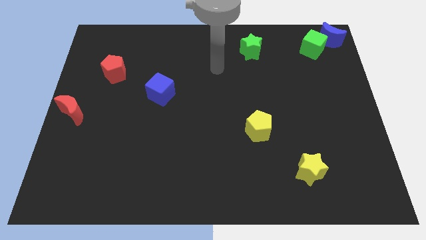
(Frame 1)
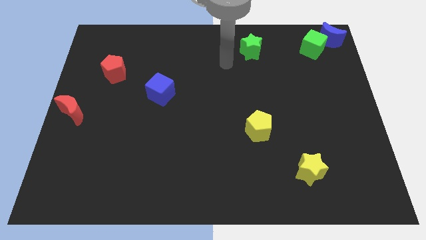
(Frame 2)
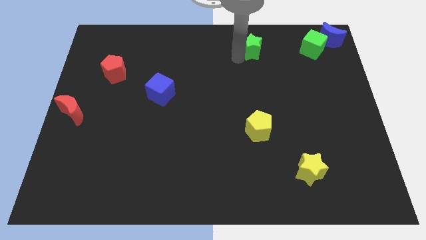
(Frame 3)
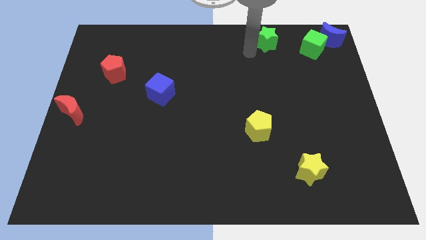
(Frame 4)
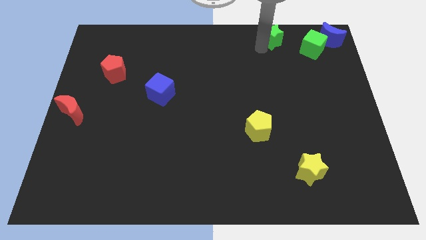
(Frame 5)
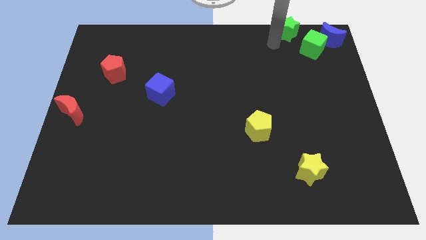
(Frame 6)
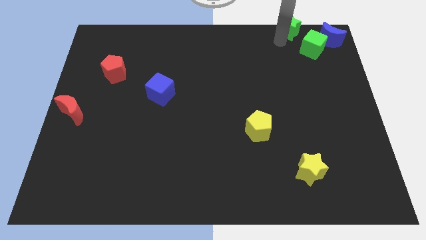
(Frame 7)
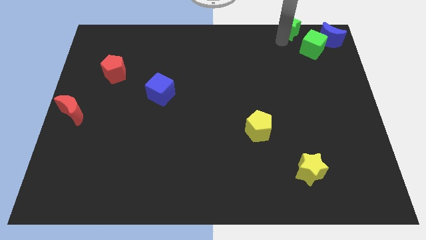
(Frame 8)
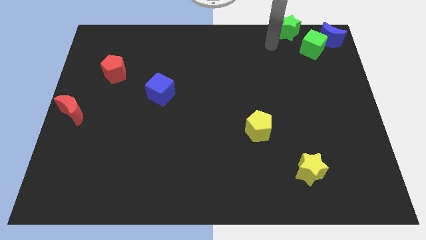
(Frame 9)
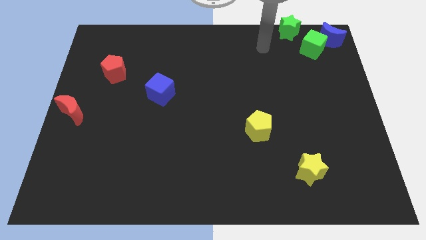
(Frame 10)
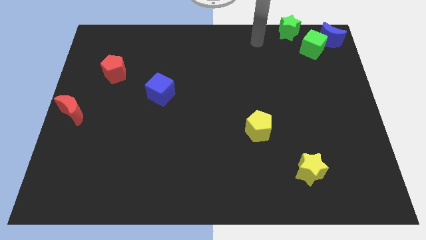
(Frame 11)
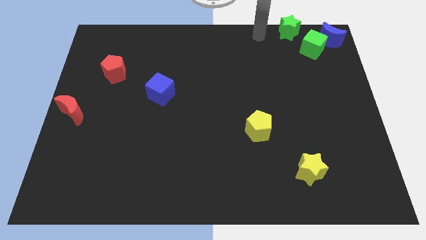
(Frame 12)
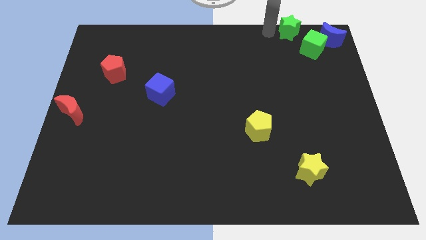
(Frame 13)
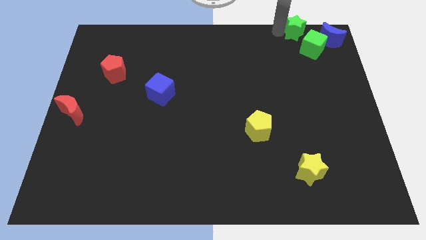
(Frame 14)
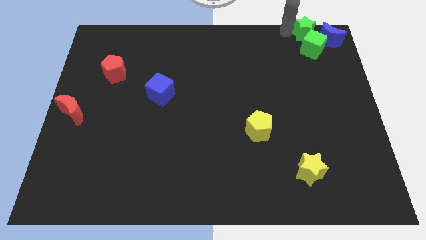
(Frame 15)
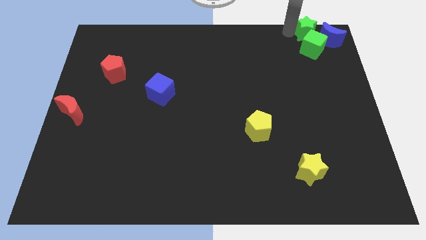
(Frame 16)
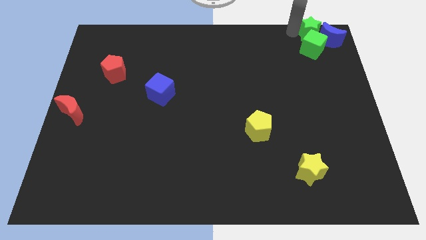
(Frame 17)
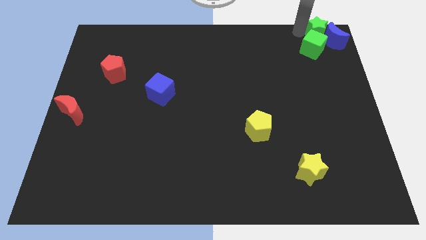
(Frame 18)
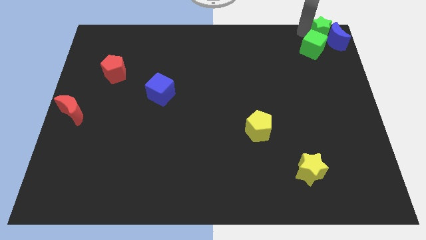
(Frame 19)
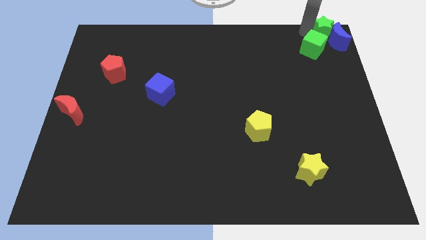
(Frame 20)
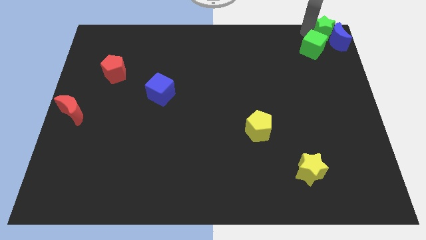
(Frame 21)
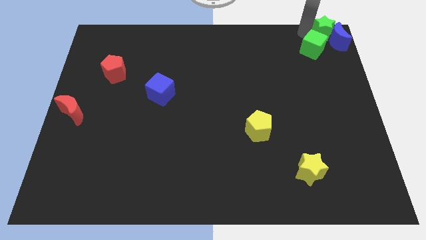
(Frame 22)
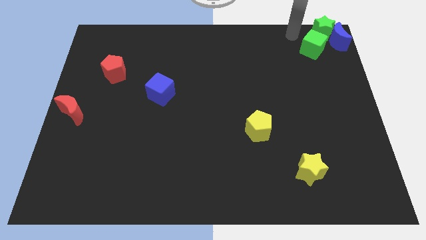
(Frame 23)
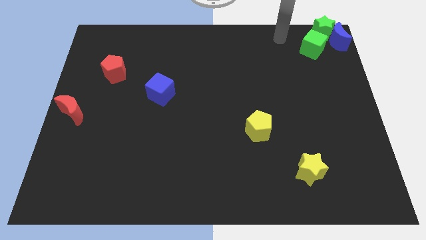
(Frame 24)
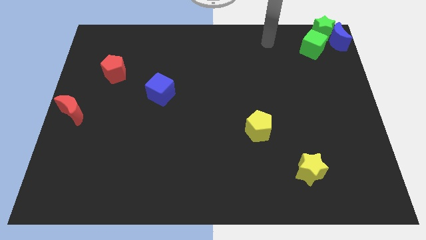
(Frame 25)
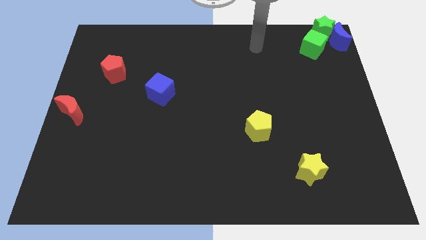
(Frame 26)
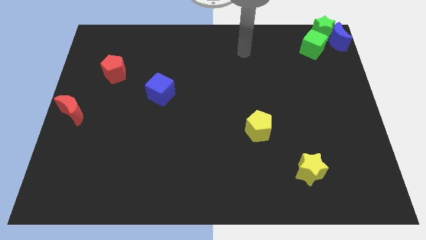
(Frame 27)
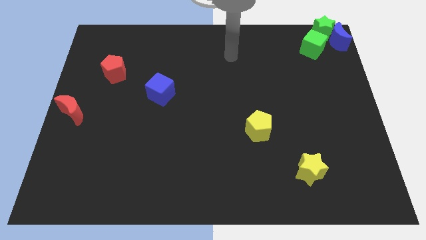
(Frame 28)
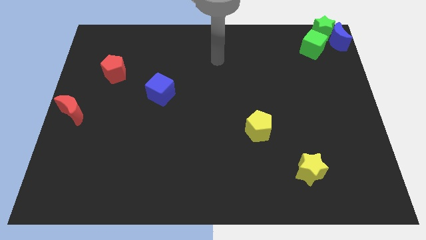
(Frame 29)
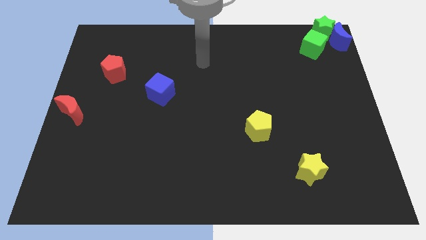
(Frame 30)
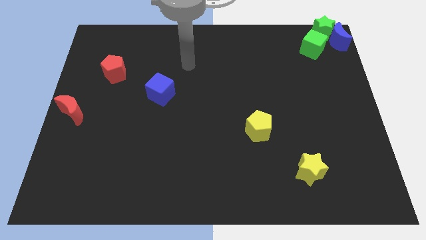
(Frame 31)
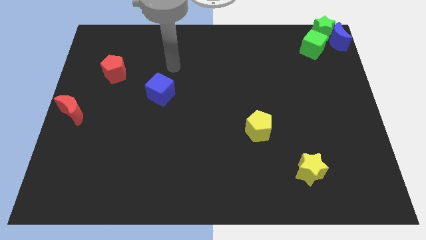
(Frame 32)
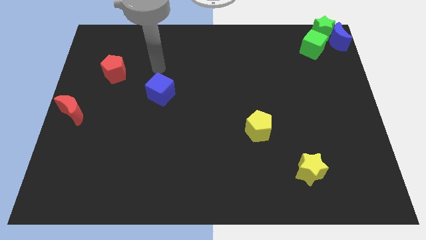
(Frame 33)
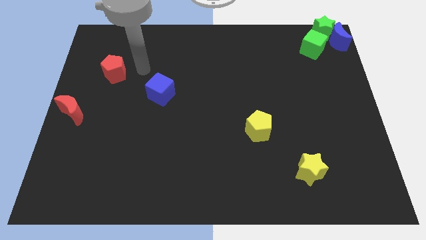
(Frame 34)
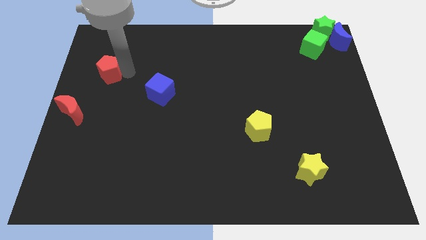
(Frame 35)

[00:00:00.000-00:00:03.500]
place the green star at the top right corner

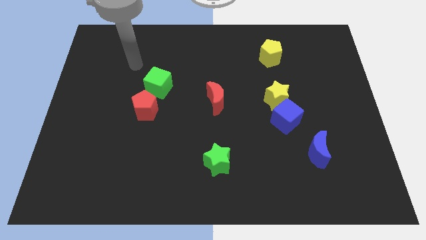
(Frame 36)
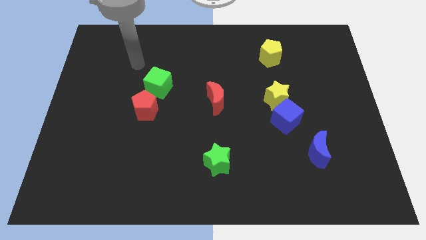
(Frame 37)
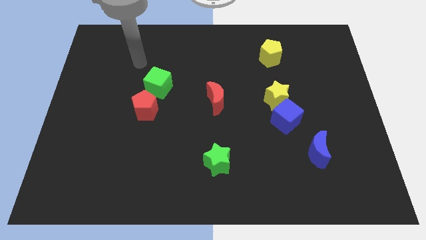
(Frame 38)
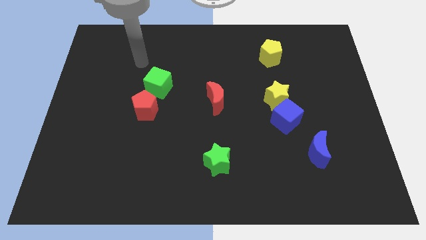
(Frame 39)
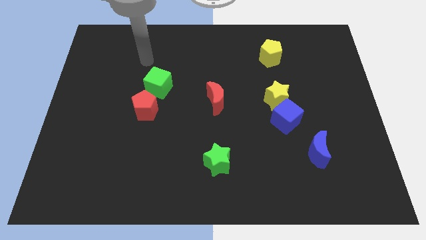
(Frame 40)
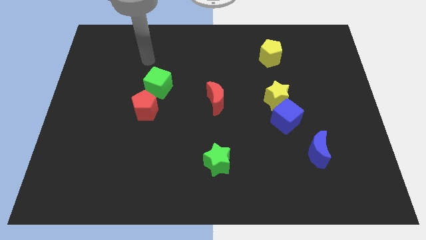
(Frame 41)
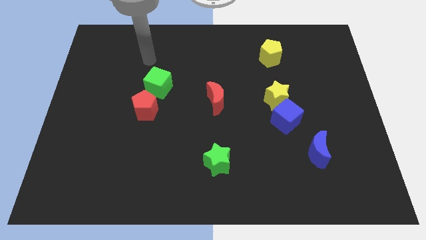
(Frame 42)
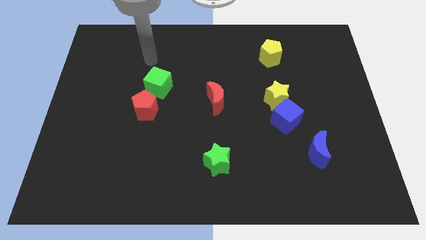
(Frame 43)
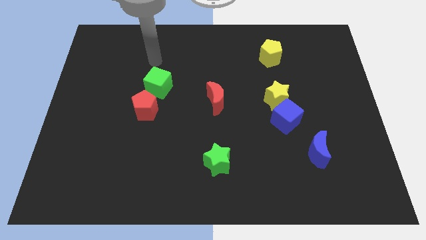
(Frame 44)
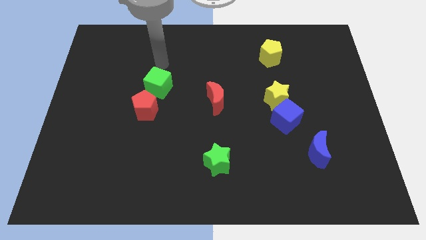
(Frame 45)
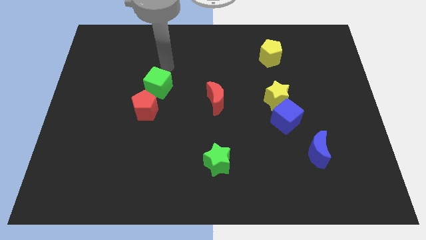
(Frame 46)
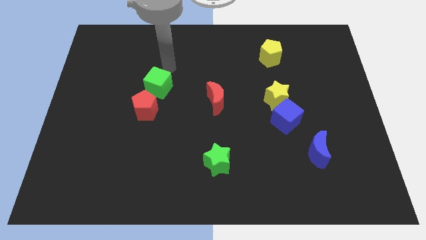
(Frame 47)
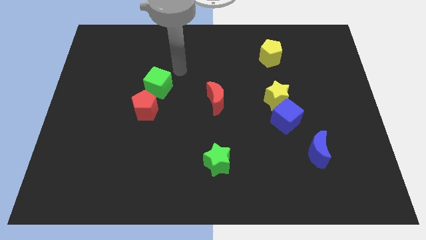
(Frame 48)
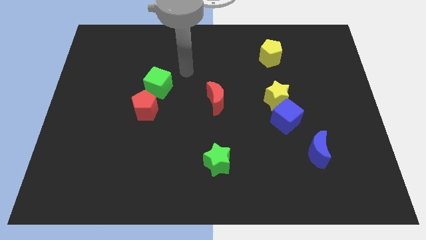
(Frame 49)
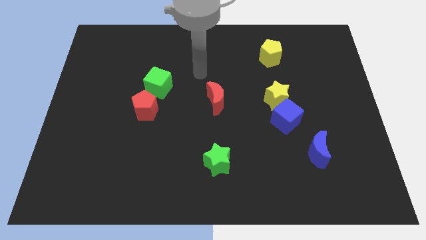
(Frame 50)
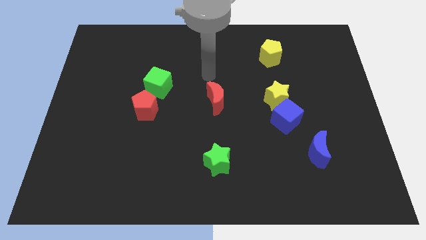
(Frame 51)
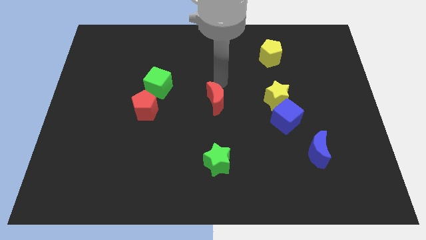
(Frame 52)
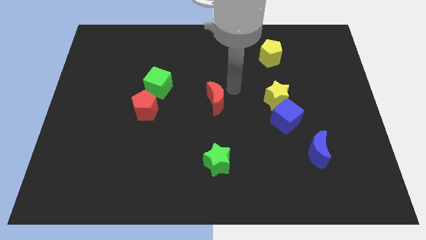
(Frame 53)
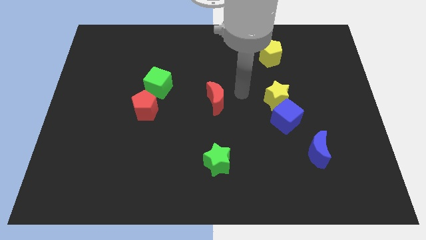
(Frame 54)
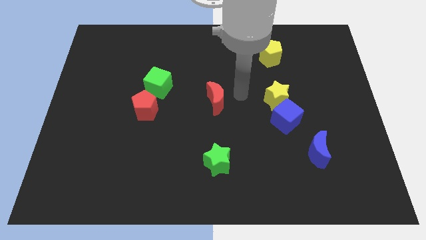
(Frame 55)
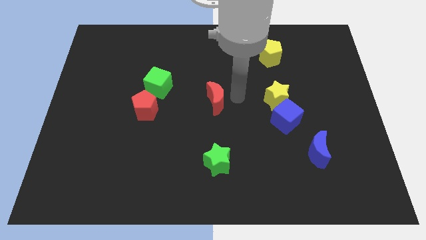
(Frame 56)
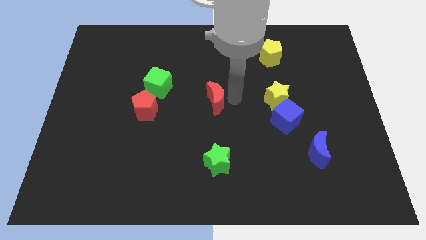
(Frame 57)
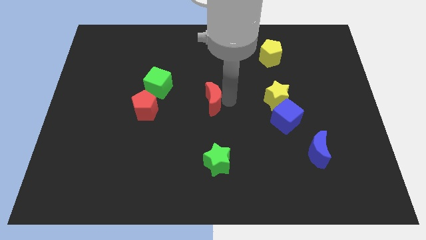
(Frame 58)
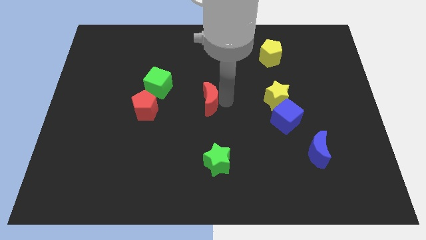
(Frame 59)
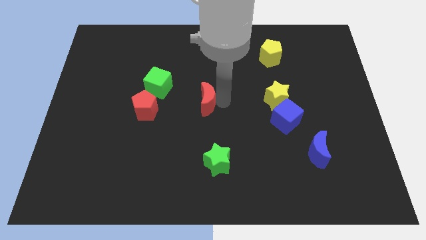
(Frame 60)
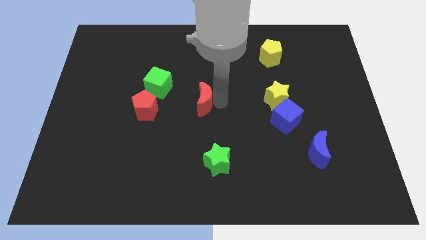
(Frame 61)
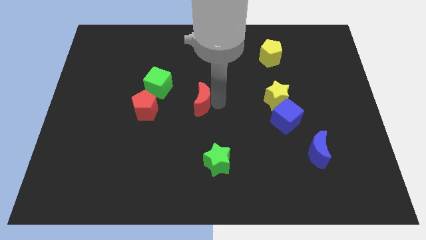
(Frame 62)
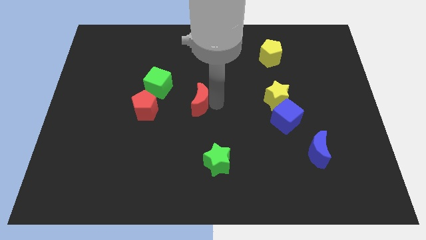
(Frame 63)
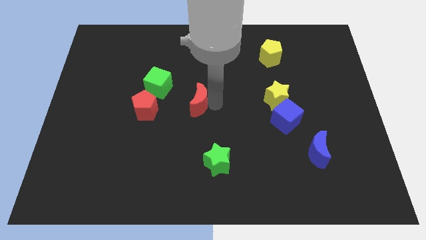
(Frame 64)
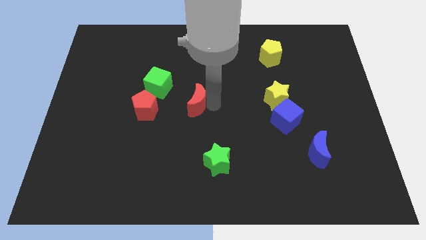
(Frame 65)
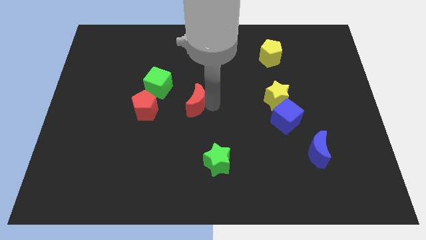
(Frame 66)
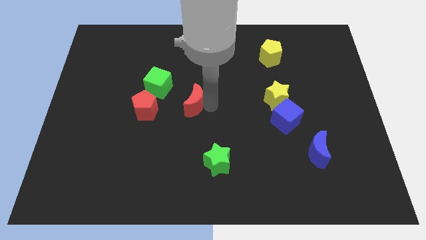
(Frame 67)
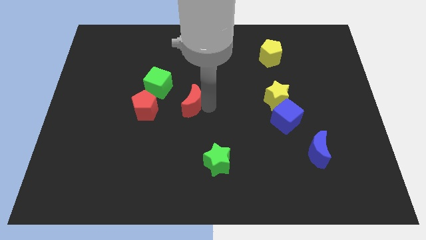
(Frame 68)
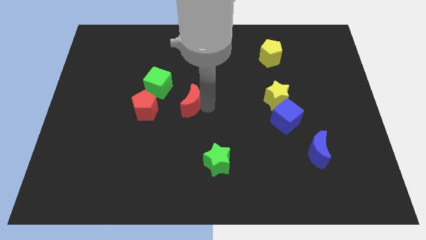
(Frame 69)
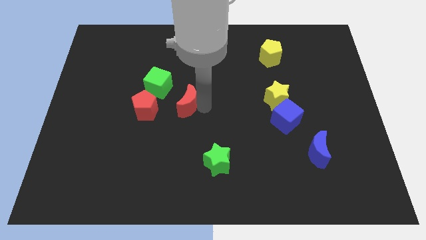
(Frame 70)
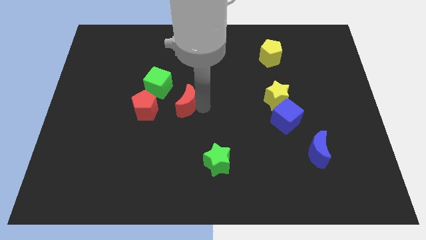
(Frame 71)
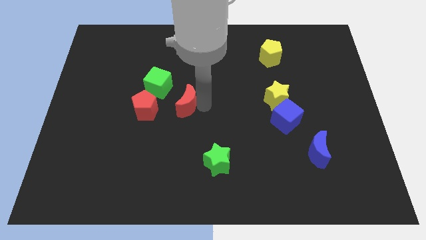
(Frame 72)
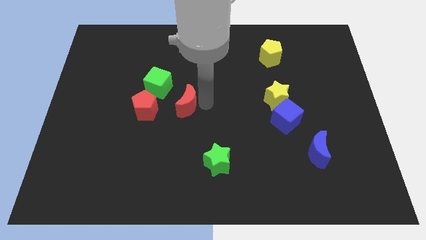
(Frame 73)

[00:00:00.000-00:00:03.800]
move your arm close to the red moon

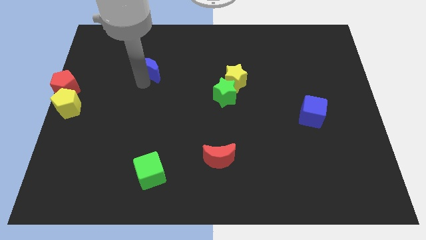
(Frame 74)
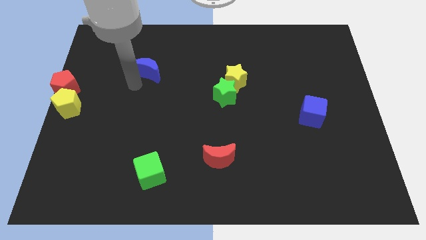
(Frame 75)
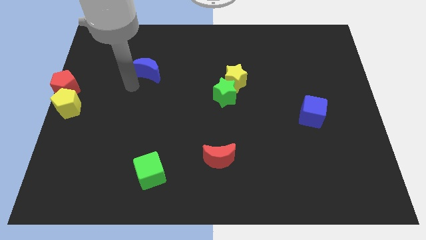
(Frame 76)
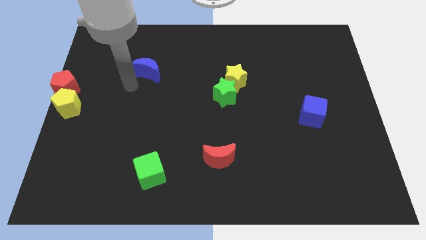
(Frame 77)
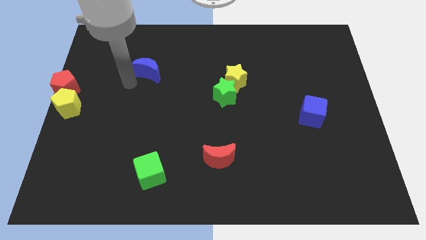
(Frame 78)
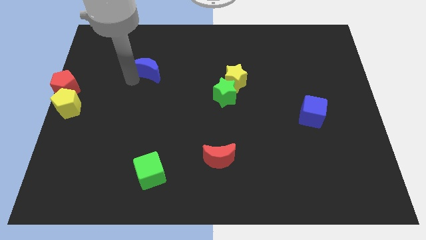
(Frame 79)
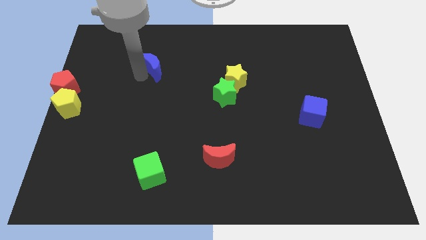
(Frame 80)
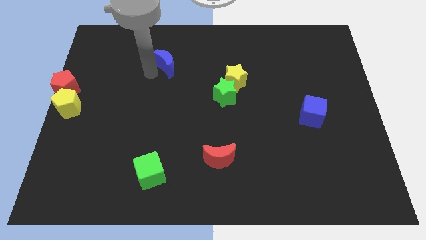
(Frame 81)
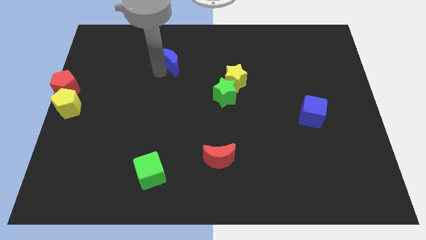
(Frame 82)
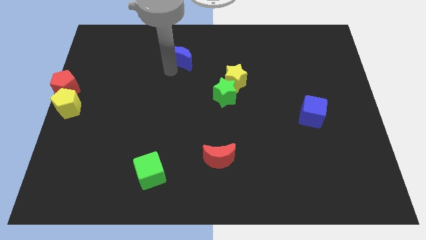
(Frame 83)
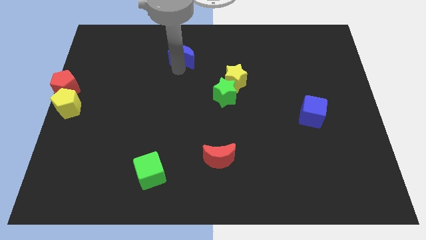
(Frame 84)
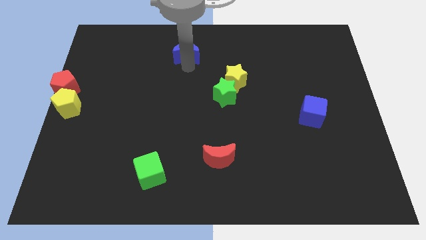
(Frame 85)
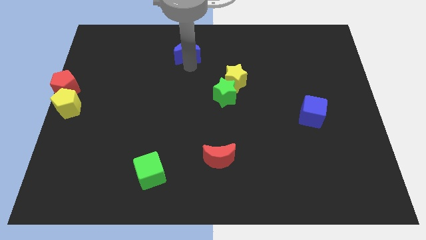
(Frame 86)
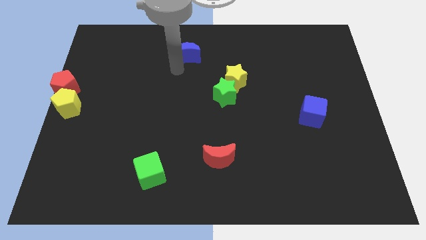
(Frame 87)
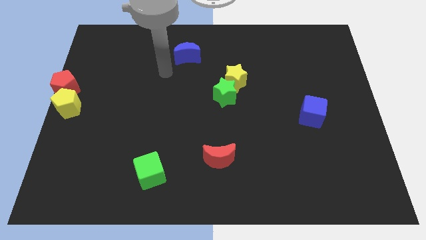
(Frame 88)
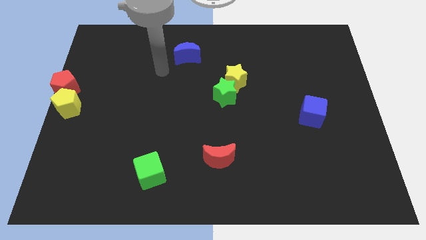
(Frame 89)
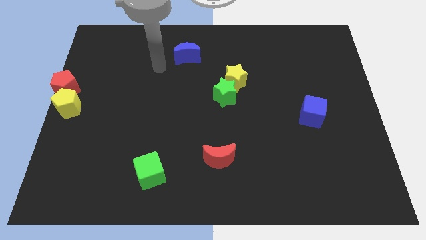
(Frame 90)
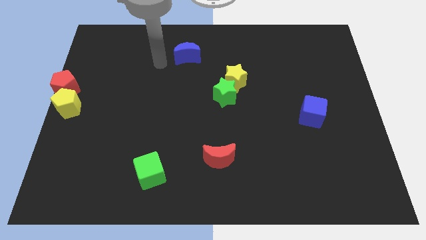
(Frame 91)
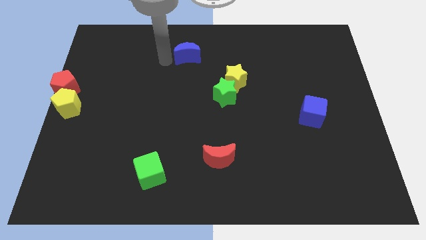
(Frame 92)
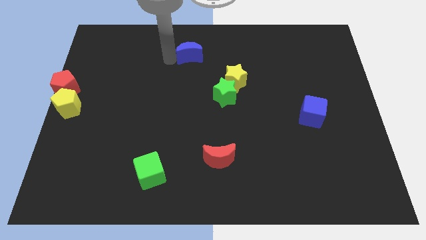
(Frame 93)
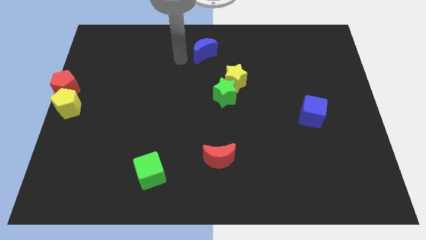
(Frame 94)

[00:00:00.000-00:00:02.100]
move blue moon towards center
